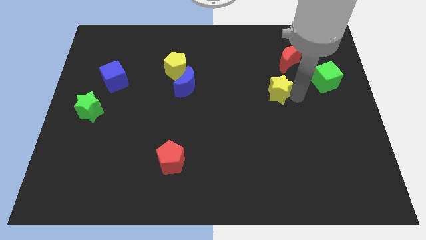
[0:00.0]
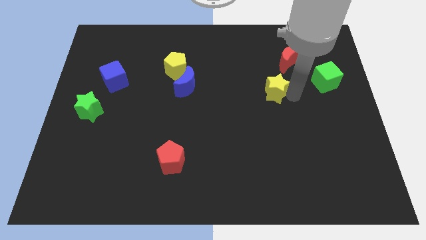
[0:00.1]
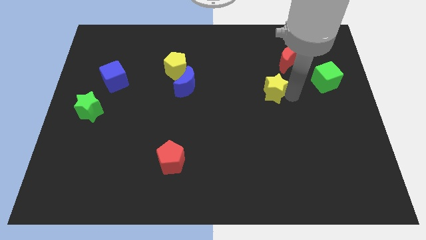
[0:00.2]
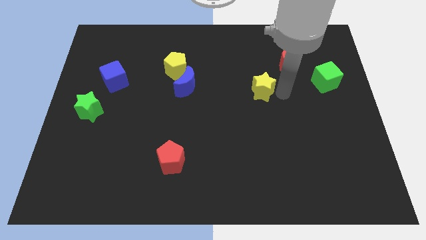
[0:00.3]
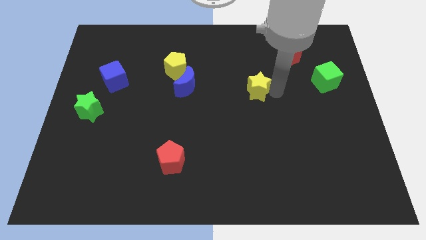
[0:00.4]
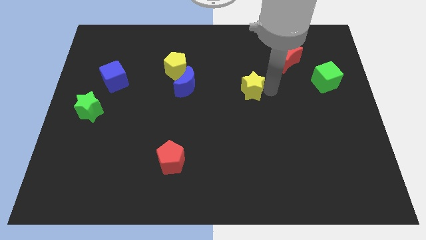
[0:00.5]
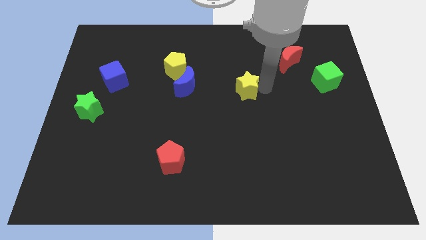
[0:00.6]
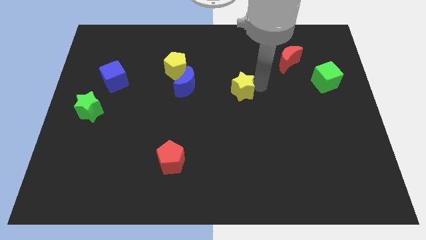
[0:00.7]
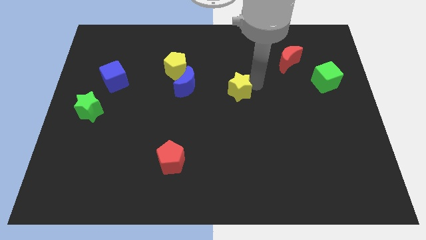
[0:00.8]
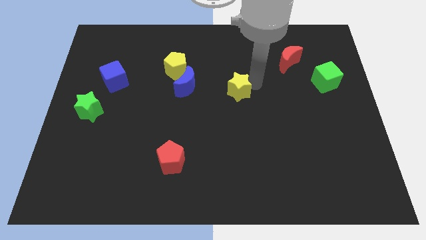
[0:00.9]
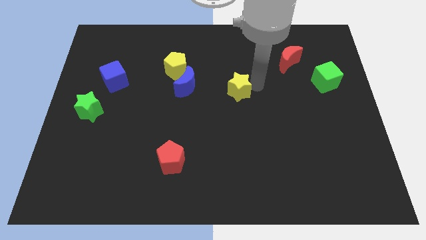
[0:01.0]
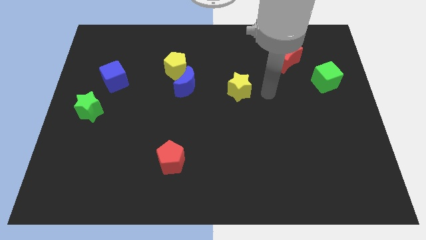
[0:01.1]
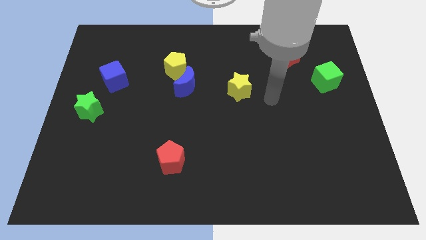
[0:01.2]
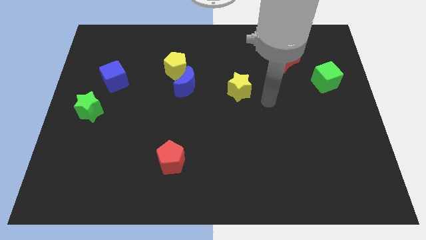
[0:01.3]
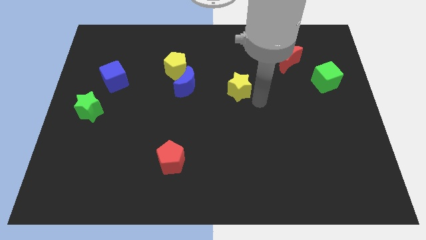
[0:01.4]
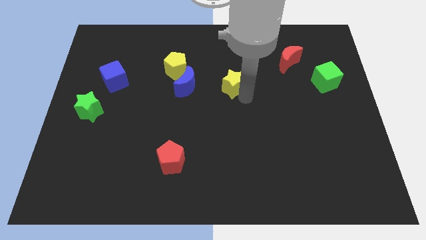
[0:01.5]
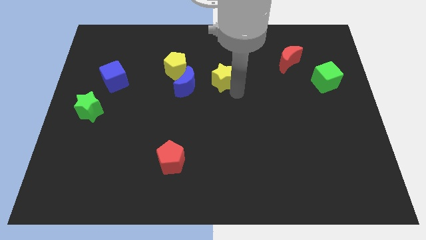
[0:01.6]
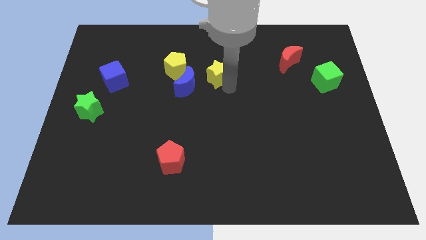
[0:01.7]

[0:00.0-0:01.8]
move the yellow star towards the blue moon

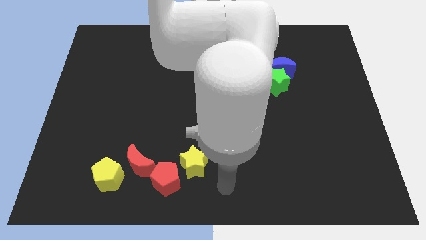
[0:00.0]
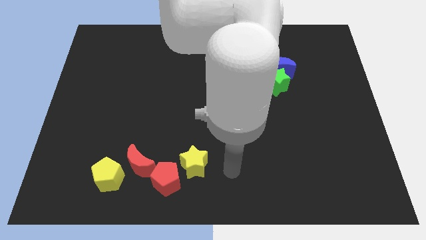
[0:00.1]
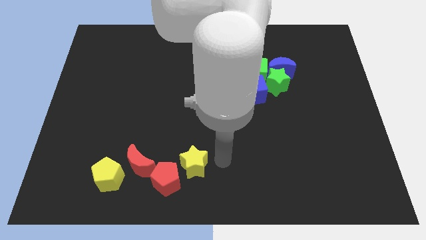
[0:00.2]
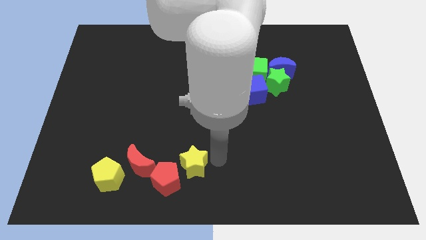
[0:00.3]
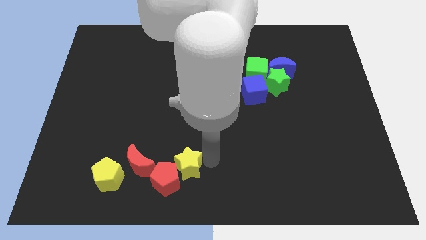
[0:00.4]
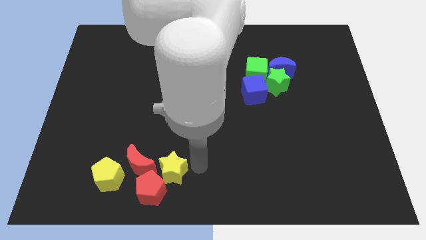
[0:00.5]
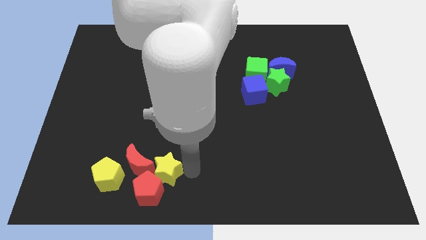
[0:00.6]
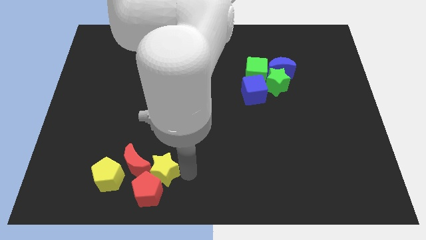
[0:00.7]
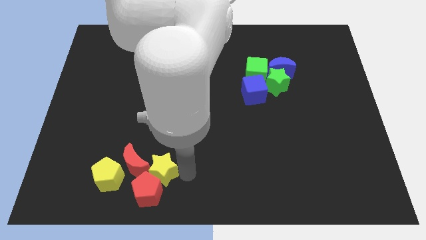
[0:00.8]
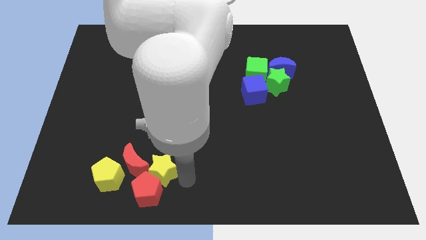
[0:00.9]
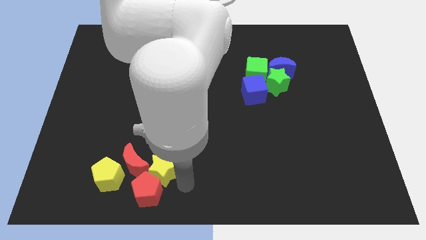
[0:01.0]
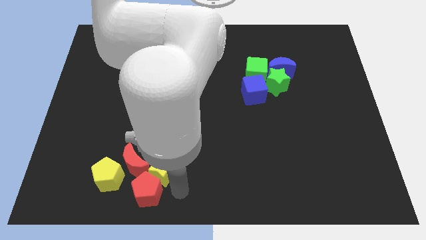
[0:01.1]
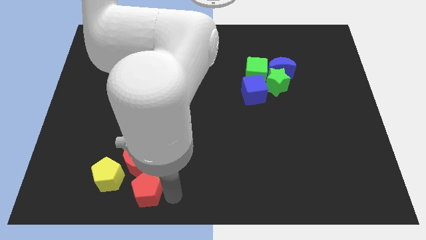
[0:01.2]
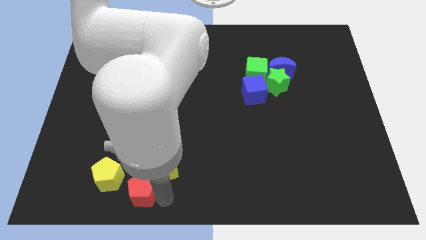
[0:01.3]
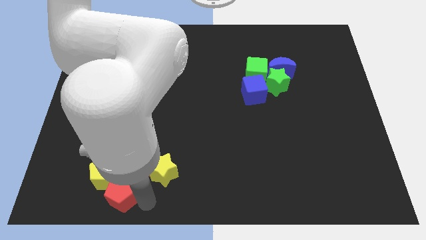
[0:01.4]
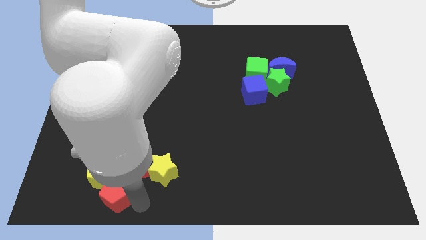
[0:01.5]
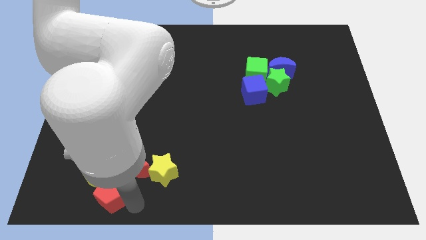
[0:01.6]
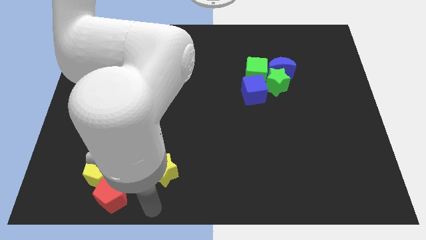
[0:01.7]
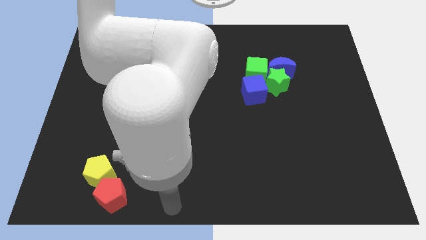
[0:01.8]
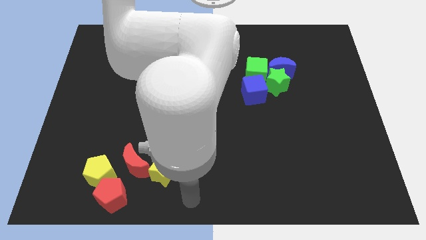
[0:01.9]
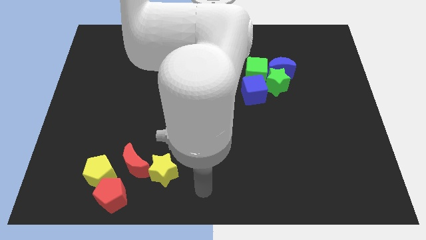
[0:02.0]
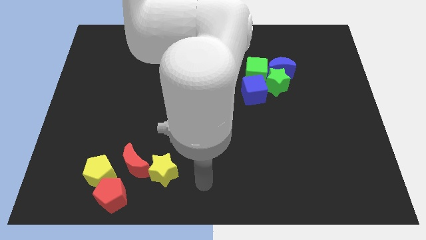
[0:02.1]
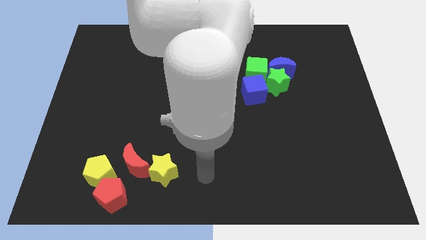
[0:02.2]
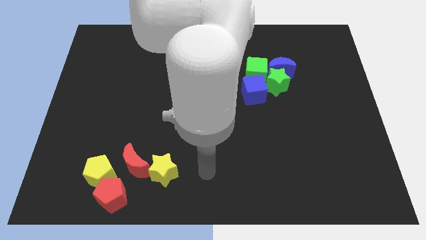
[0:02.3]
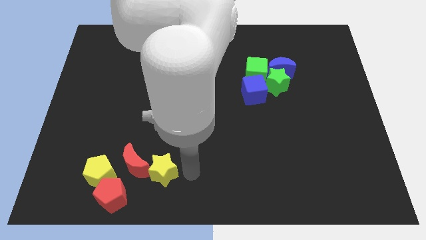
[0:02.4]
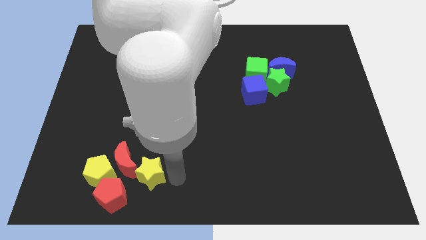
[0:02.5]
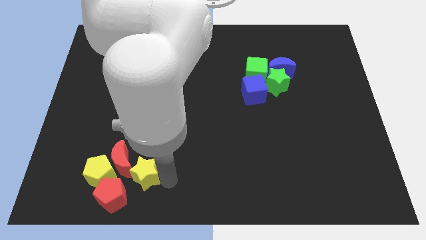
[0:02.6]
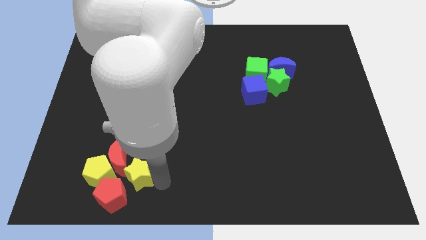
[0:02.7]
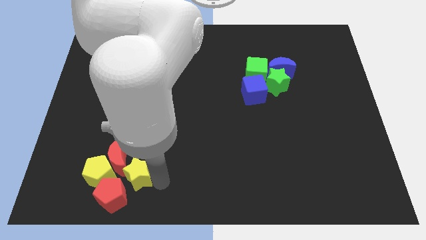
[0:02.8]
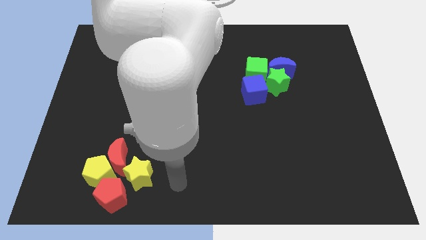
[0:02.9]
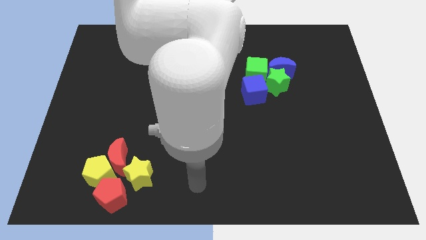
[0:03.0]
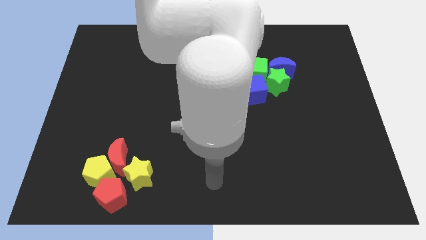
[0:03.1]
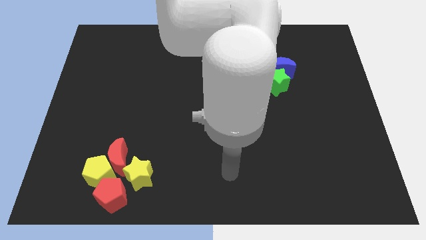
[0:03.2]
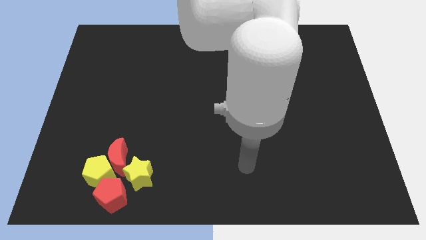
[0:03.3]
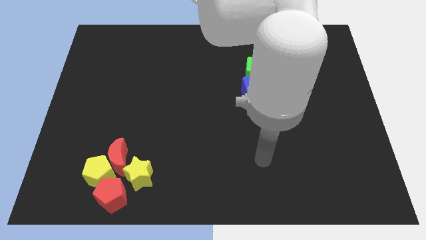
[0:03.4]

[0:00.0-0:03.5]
move the yellow star and red moon close to the yellow pentagon and red pentagon

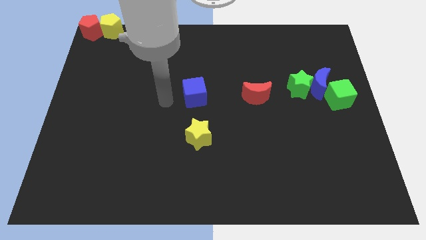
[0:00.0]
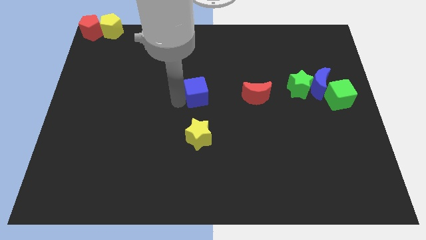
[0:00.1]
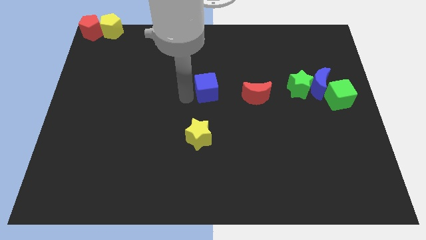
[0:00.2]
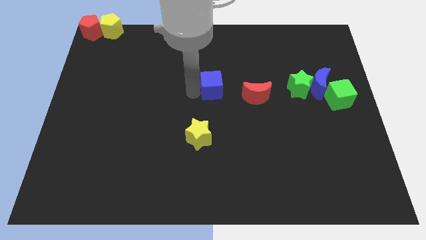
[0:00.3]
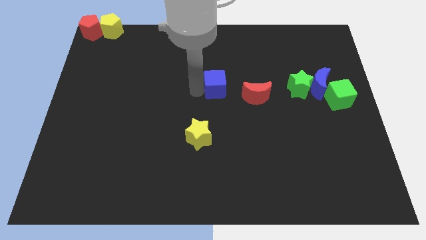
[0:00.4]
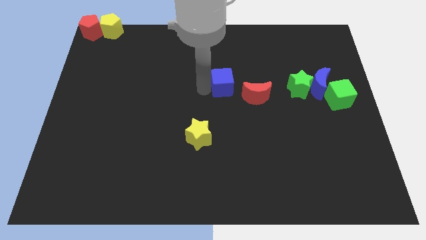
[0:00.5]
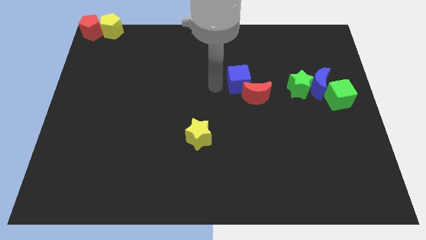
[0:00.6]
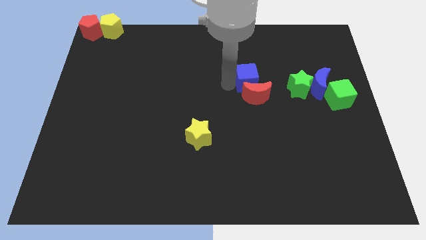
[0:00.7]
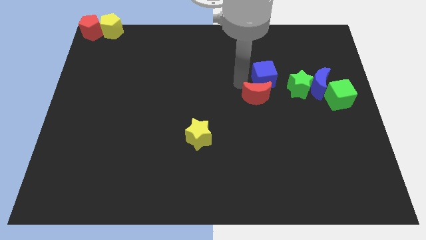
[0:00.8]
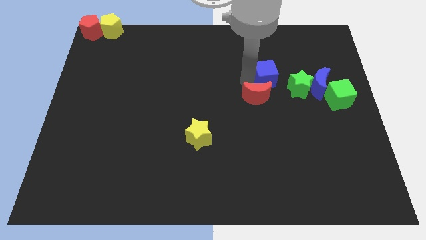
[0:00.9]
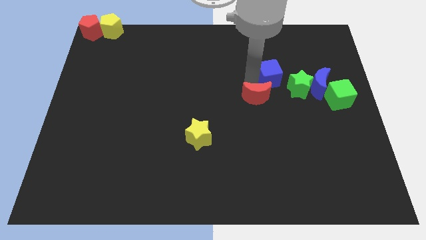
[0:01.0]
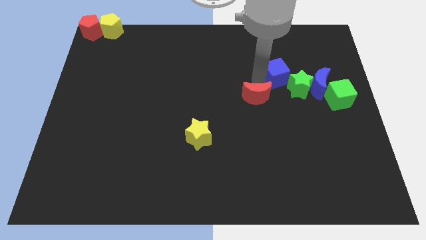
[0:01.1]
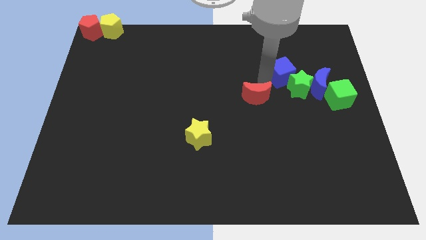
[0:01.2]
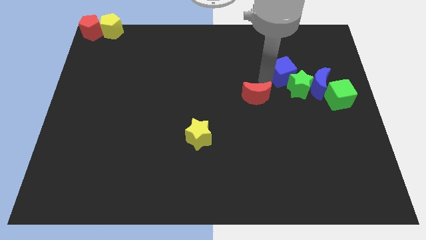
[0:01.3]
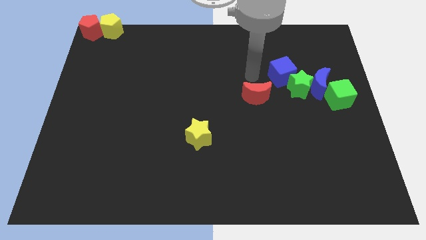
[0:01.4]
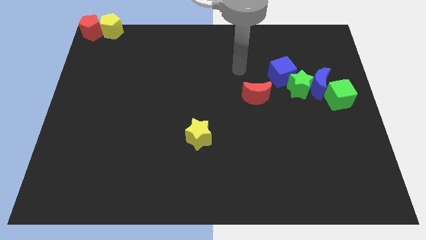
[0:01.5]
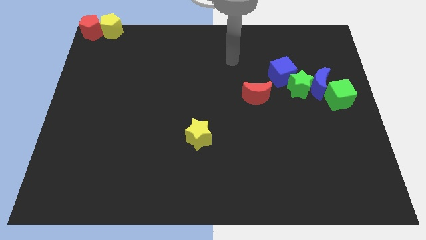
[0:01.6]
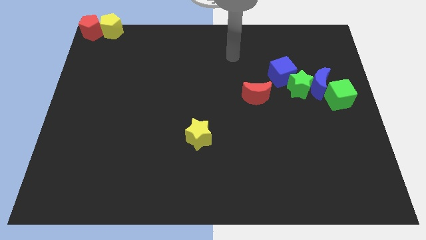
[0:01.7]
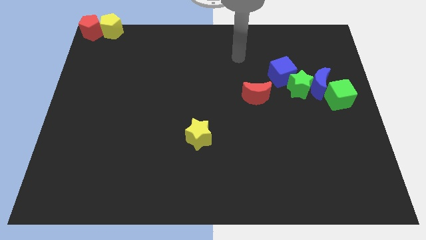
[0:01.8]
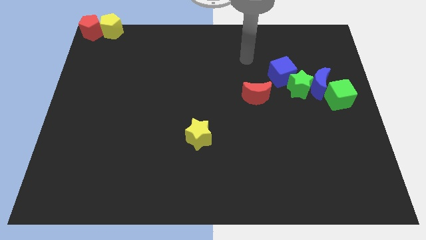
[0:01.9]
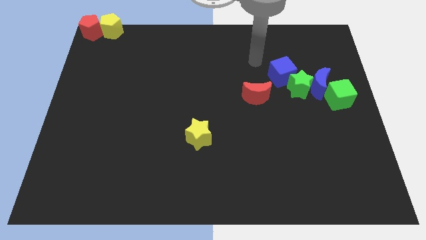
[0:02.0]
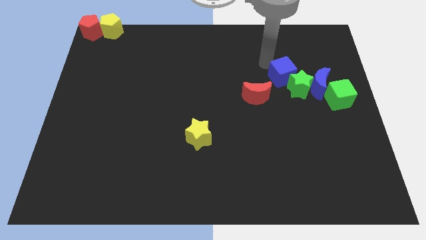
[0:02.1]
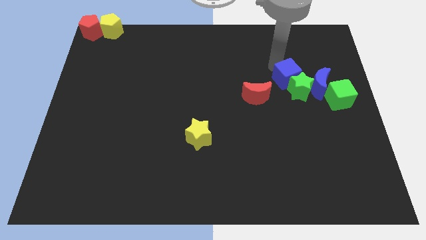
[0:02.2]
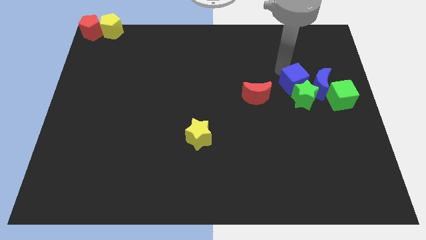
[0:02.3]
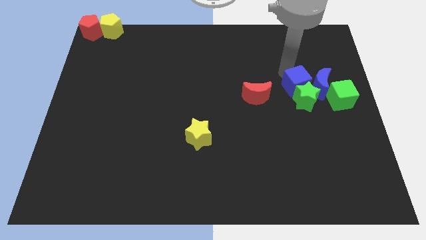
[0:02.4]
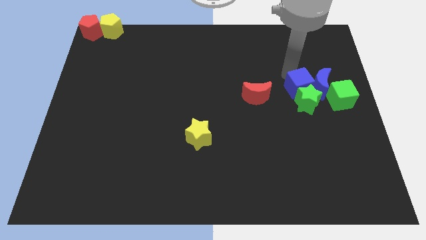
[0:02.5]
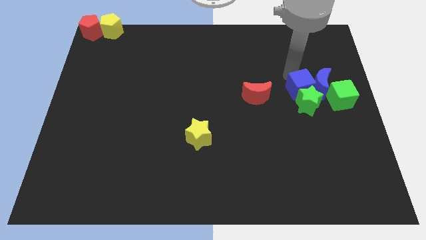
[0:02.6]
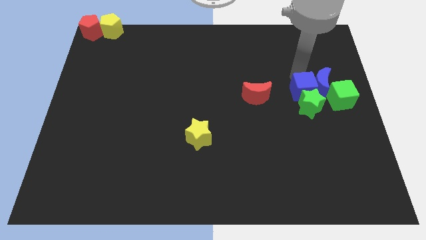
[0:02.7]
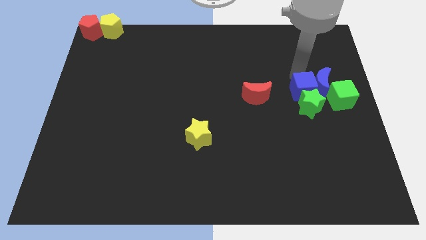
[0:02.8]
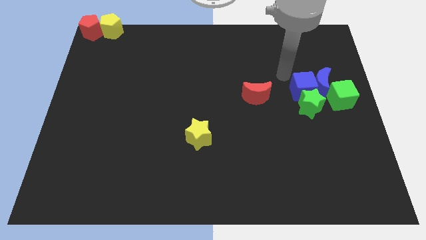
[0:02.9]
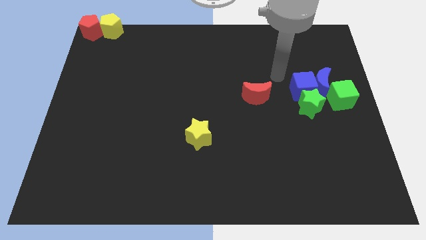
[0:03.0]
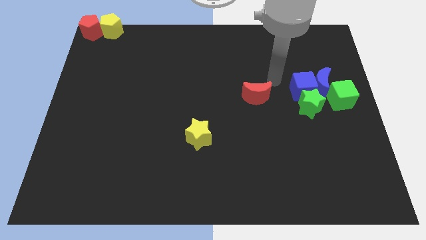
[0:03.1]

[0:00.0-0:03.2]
place blue cube on left side of blue moon

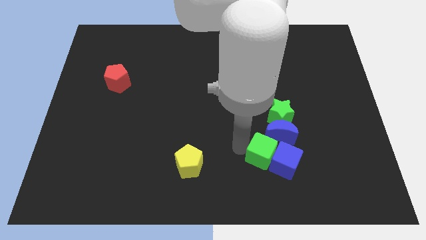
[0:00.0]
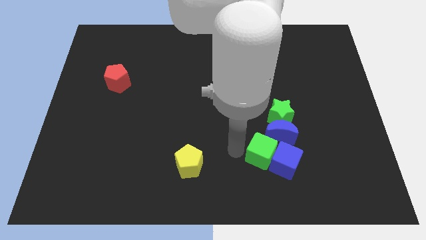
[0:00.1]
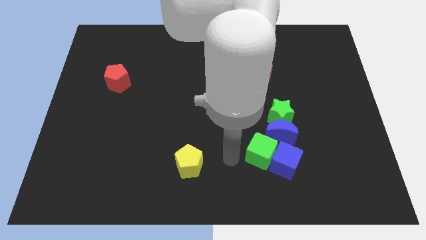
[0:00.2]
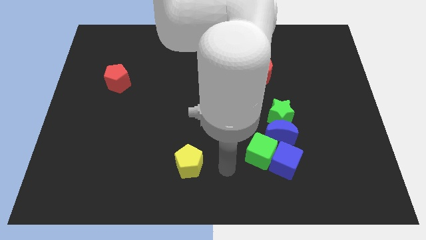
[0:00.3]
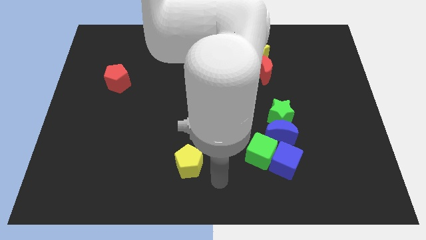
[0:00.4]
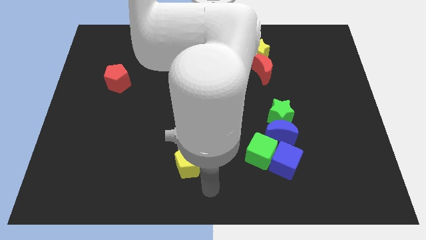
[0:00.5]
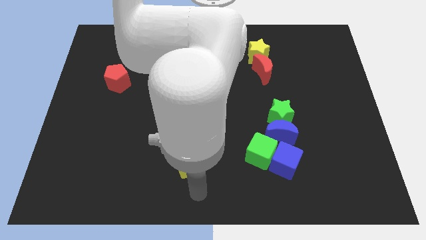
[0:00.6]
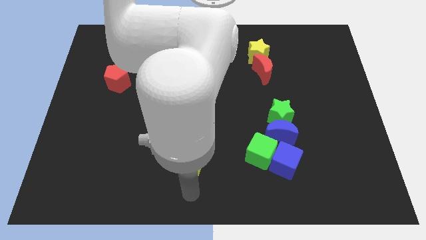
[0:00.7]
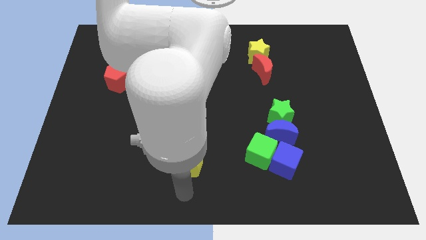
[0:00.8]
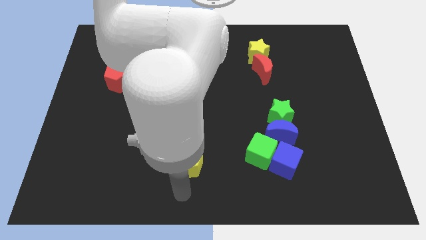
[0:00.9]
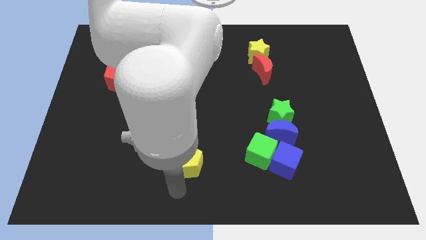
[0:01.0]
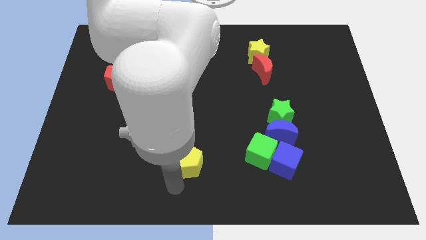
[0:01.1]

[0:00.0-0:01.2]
move your hand towards the yellow pentagon
